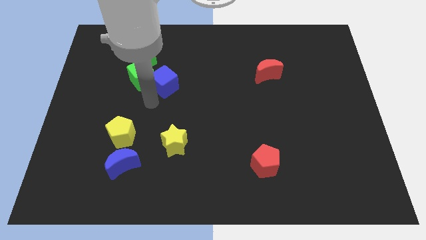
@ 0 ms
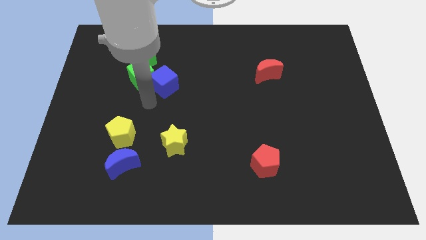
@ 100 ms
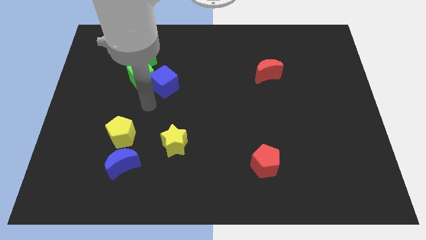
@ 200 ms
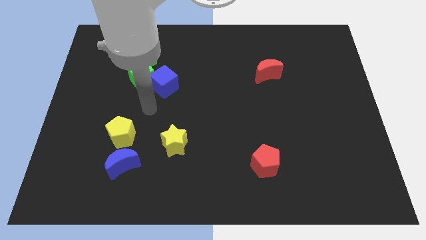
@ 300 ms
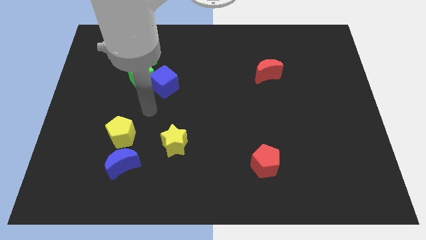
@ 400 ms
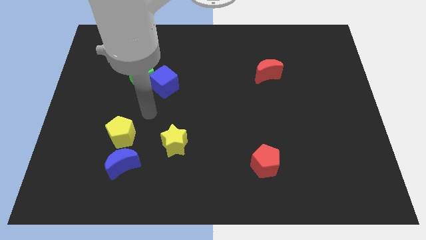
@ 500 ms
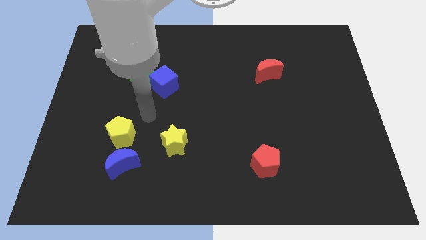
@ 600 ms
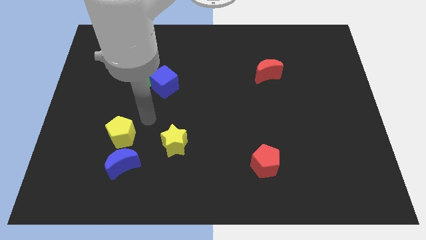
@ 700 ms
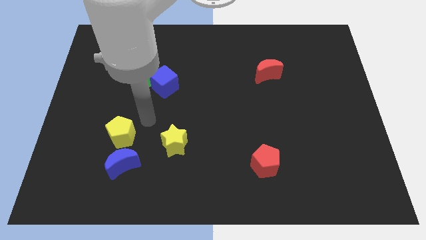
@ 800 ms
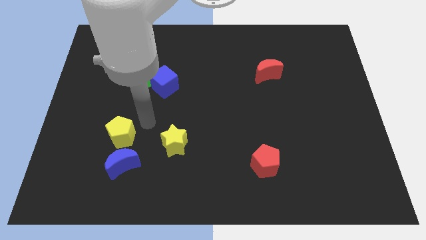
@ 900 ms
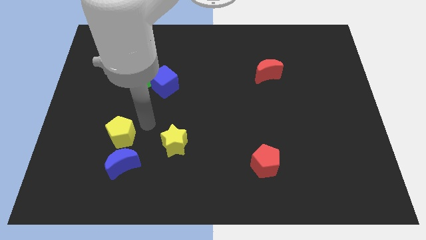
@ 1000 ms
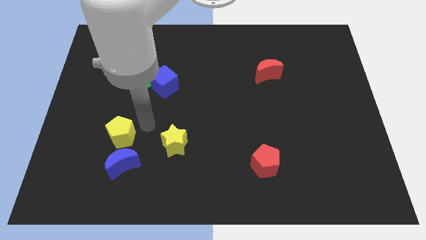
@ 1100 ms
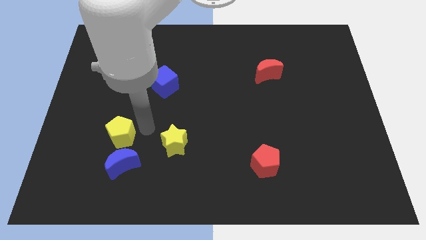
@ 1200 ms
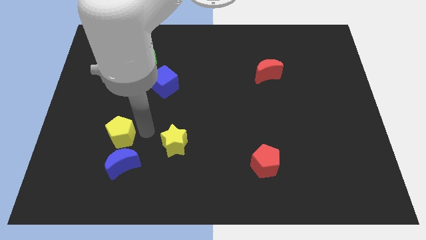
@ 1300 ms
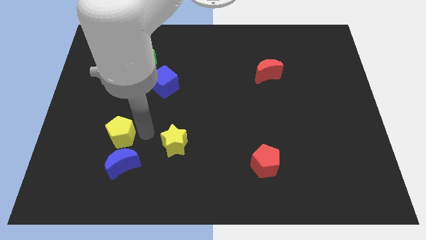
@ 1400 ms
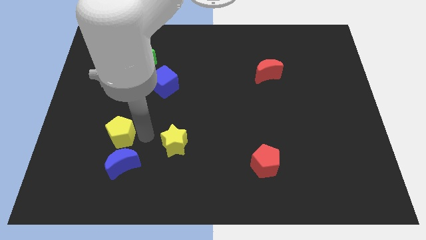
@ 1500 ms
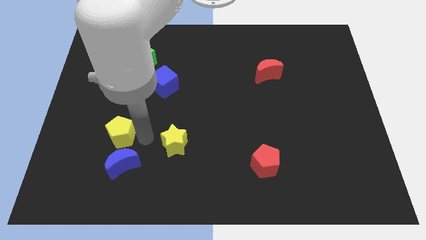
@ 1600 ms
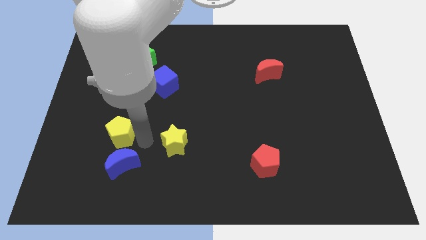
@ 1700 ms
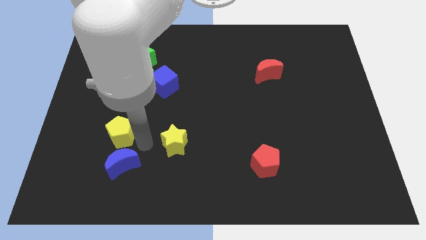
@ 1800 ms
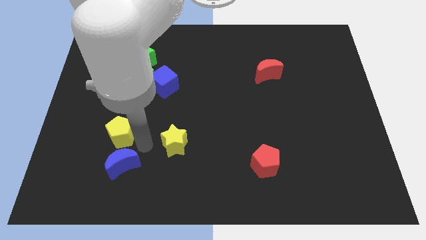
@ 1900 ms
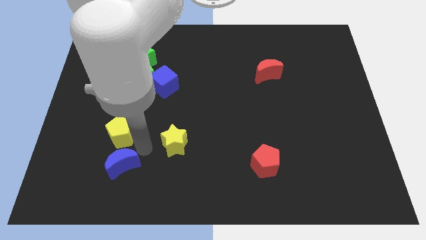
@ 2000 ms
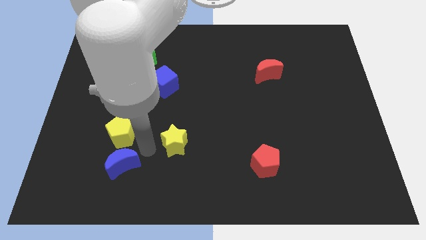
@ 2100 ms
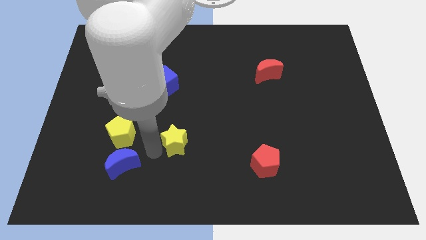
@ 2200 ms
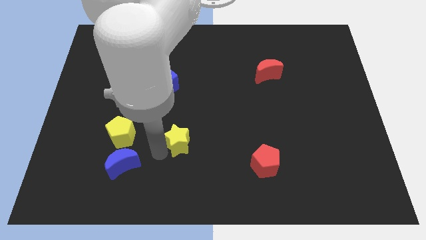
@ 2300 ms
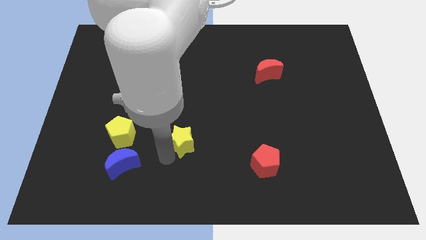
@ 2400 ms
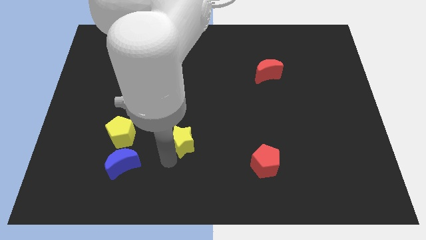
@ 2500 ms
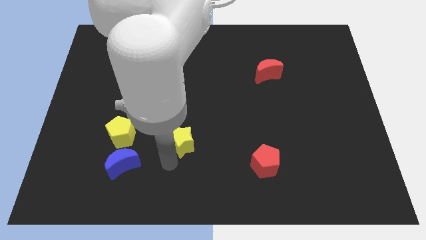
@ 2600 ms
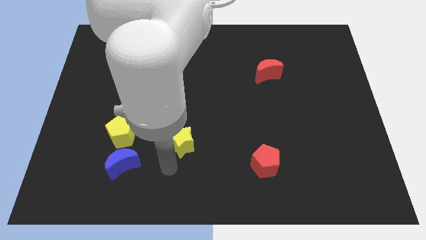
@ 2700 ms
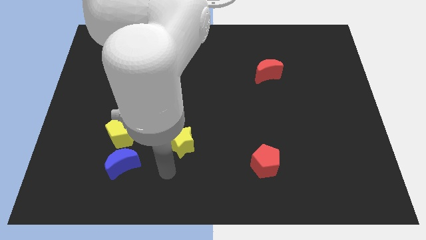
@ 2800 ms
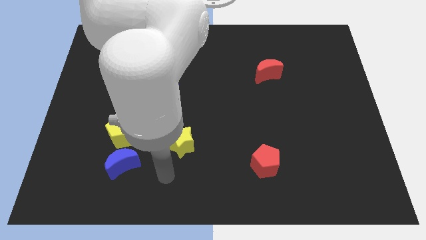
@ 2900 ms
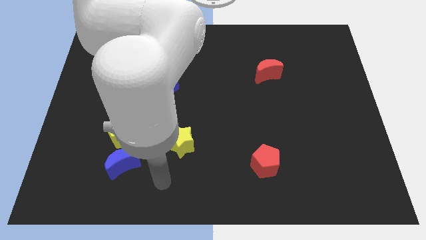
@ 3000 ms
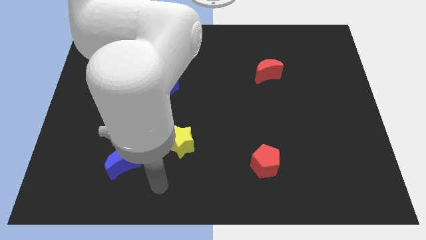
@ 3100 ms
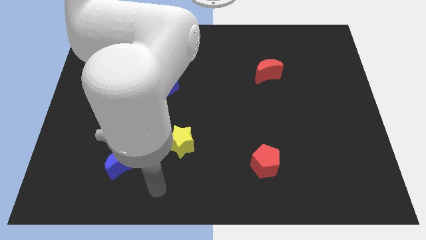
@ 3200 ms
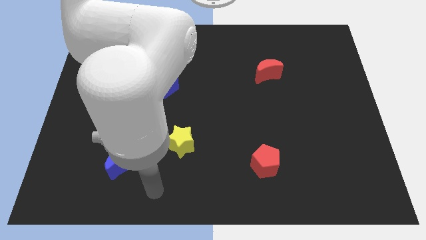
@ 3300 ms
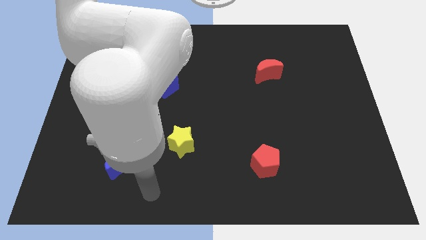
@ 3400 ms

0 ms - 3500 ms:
move the arm towards the bottom of the board

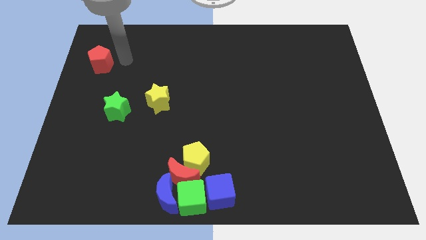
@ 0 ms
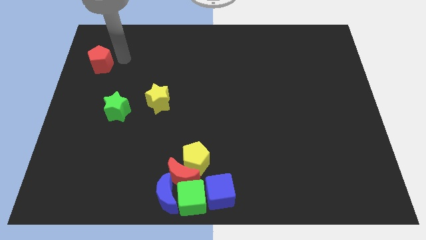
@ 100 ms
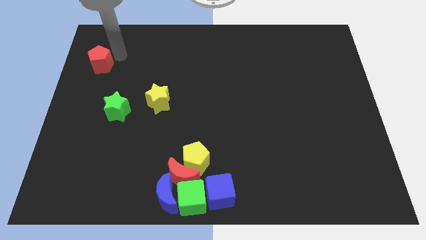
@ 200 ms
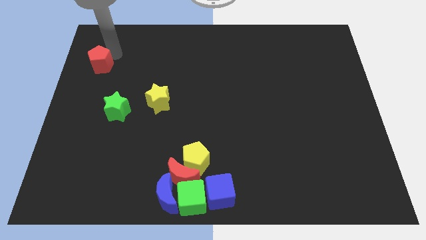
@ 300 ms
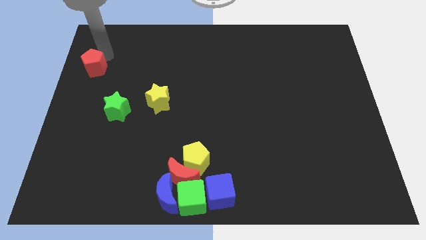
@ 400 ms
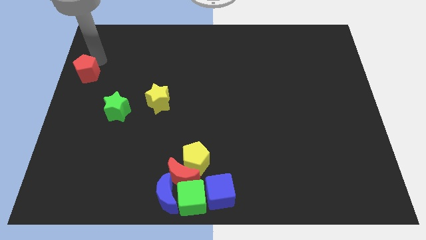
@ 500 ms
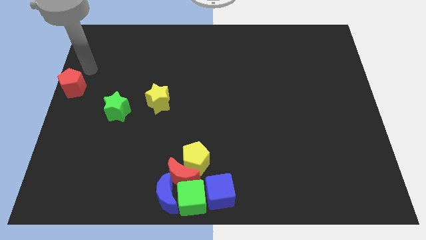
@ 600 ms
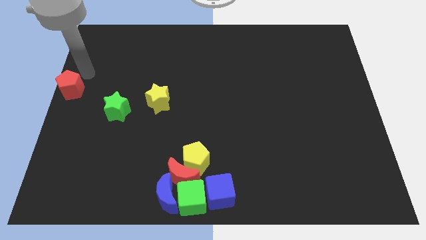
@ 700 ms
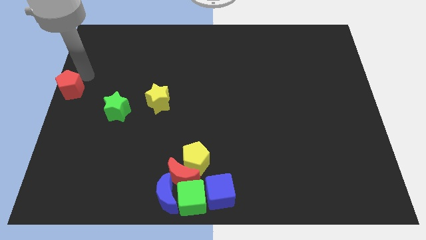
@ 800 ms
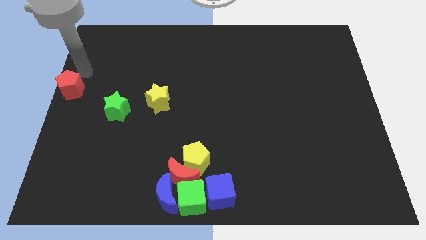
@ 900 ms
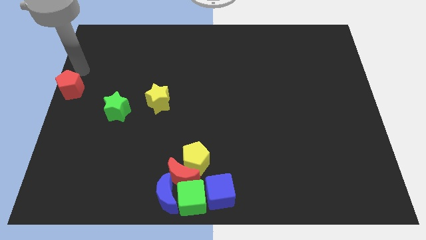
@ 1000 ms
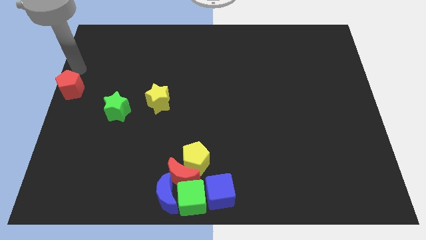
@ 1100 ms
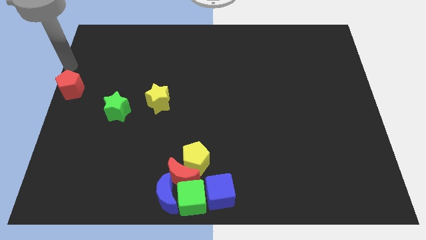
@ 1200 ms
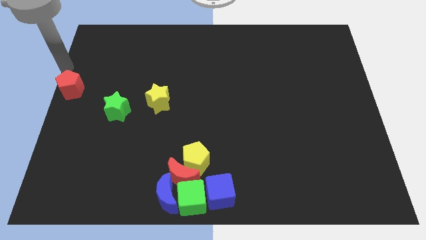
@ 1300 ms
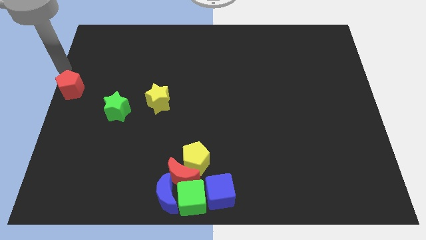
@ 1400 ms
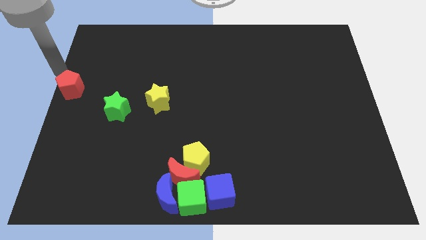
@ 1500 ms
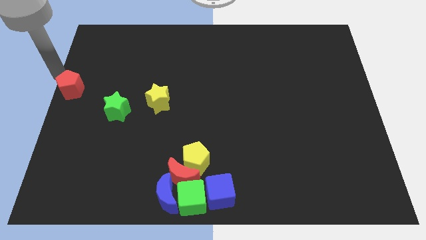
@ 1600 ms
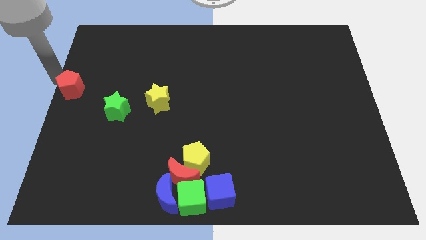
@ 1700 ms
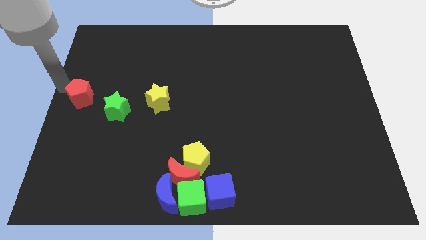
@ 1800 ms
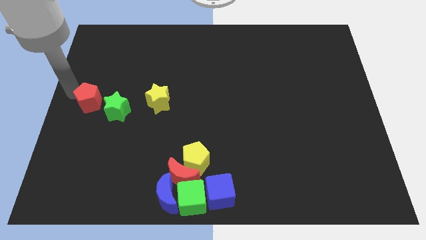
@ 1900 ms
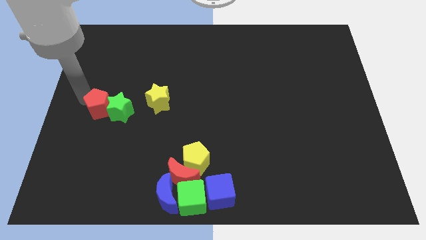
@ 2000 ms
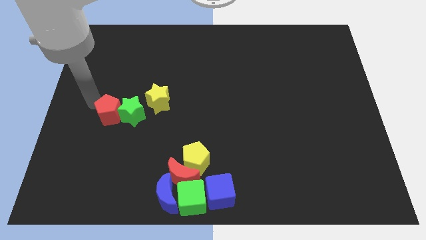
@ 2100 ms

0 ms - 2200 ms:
push the red pentagon into the green star

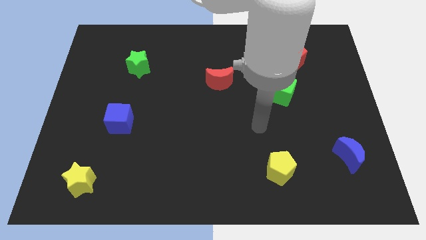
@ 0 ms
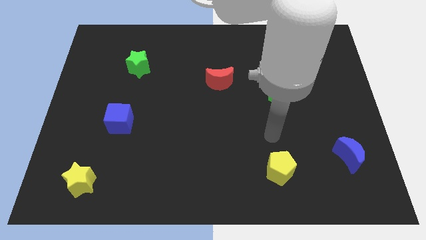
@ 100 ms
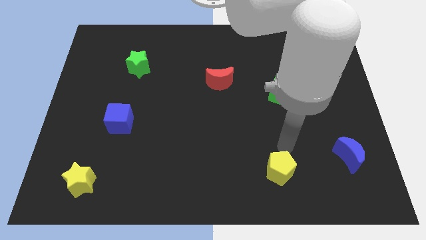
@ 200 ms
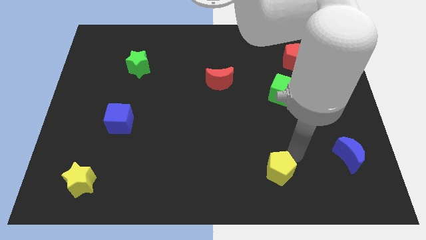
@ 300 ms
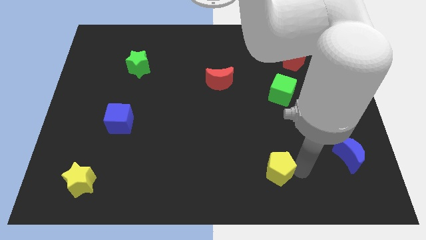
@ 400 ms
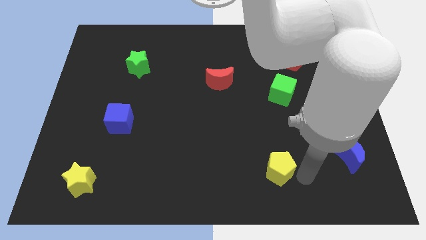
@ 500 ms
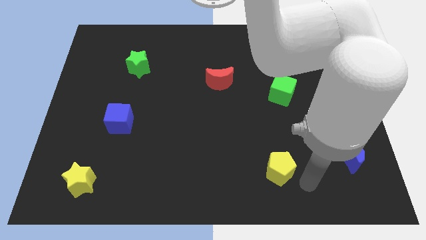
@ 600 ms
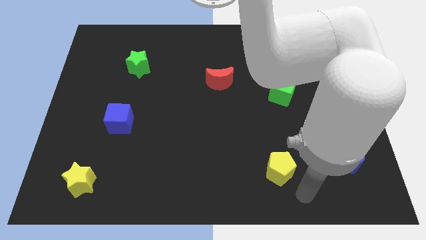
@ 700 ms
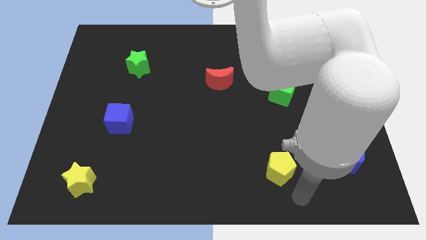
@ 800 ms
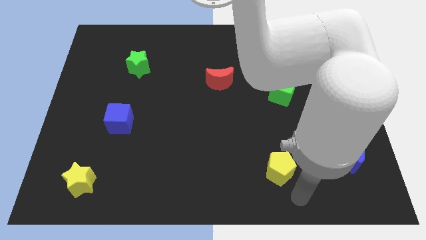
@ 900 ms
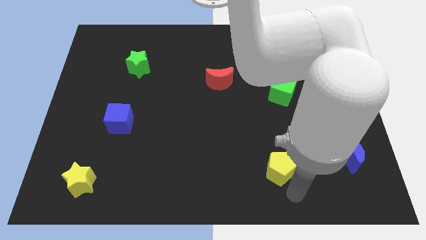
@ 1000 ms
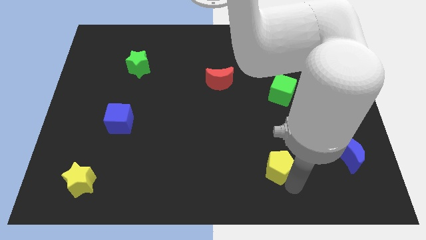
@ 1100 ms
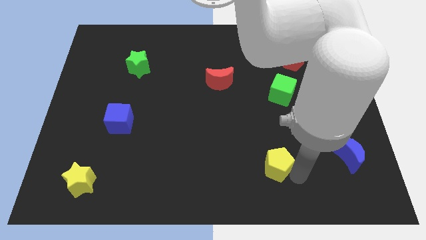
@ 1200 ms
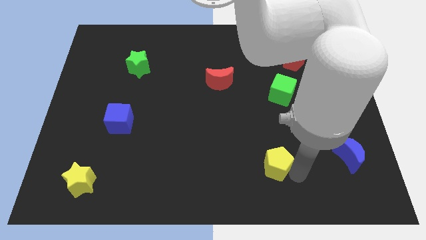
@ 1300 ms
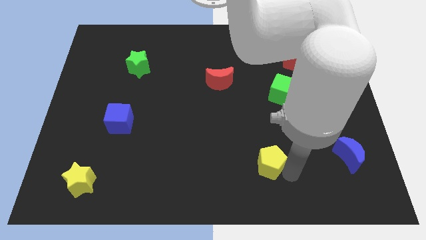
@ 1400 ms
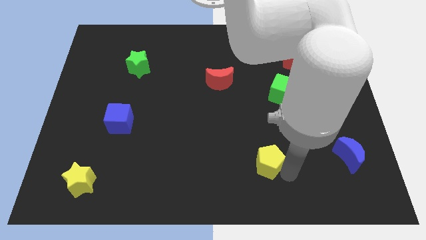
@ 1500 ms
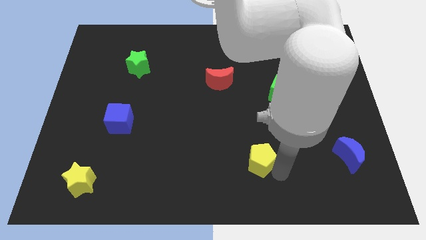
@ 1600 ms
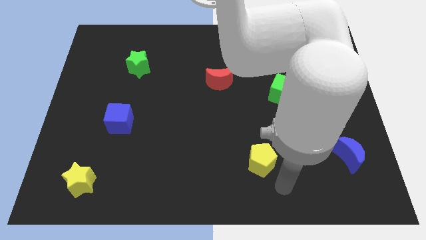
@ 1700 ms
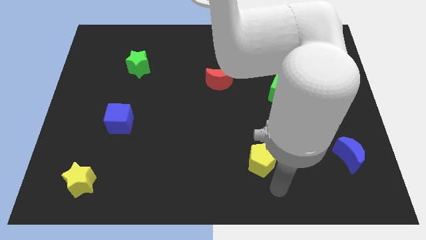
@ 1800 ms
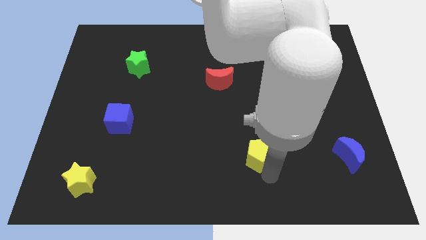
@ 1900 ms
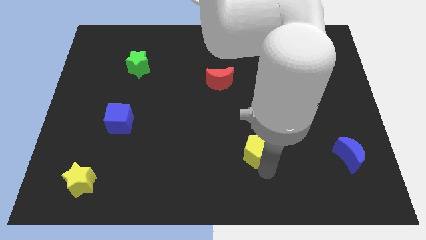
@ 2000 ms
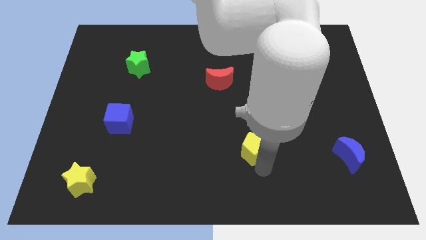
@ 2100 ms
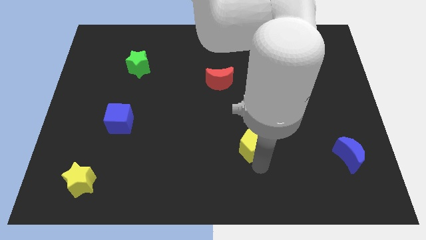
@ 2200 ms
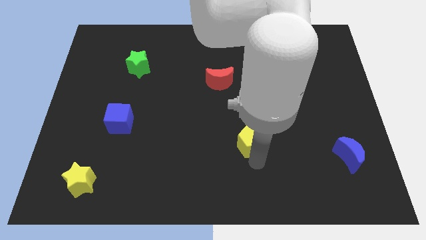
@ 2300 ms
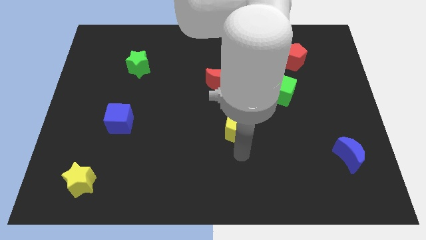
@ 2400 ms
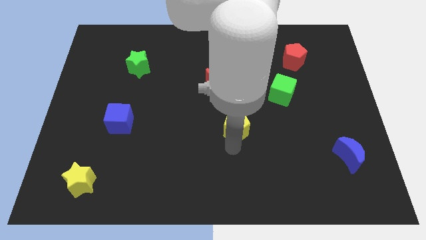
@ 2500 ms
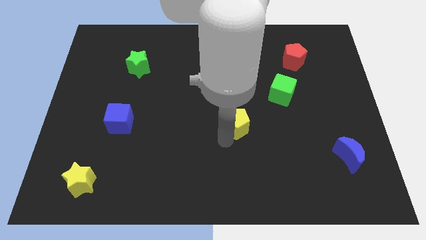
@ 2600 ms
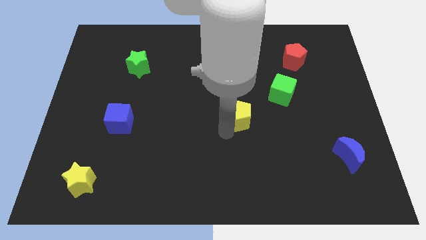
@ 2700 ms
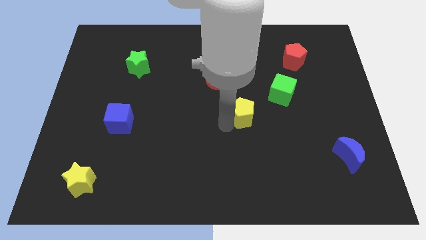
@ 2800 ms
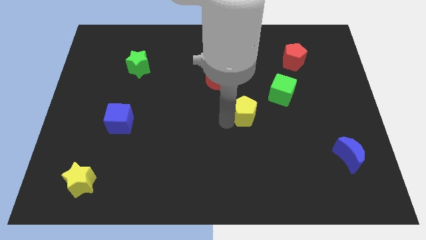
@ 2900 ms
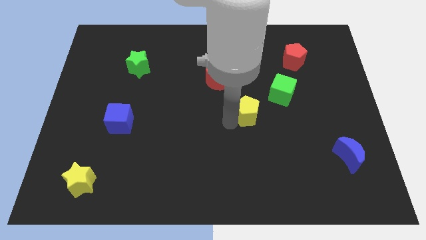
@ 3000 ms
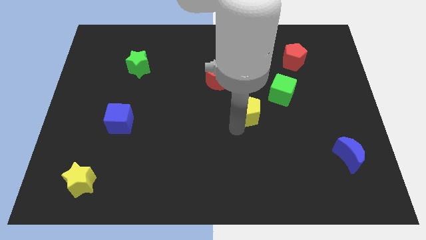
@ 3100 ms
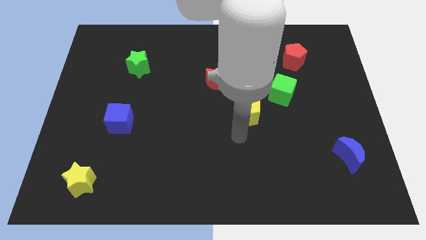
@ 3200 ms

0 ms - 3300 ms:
push the yellow pentagon towards the center
